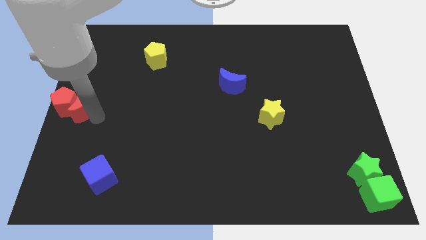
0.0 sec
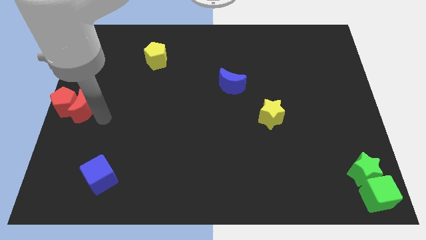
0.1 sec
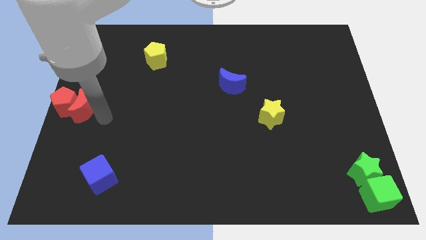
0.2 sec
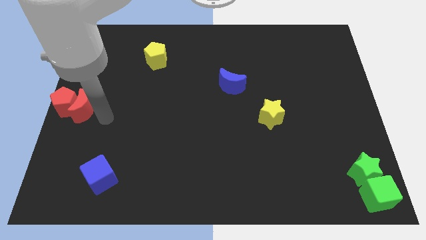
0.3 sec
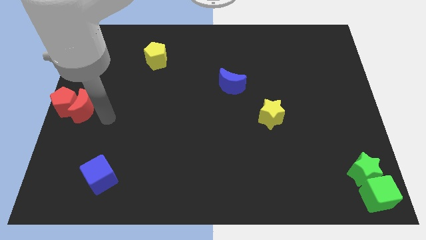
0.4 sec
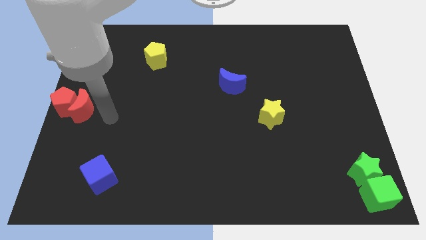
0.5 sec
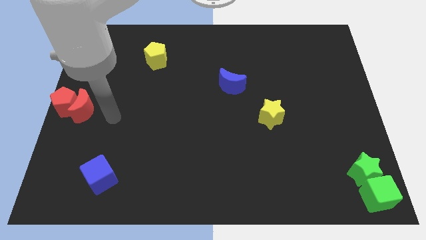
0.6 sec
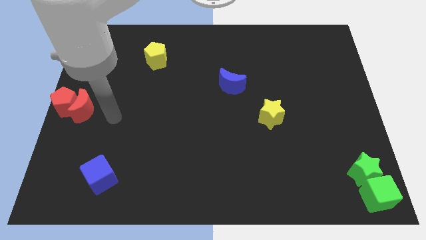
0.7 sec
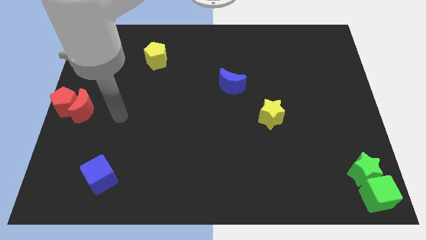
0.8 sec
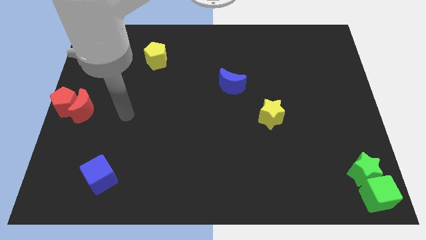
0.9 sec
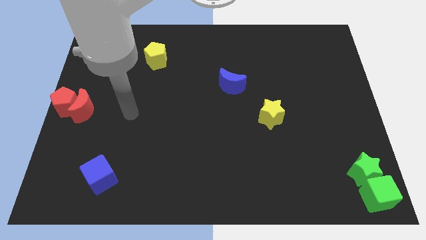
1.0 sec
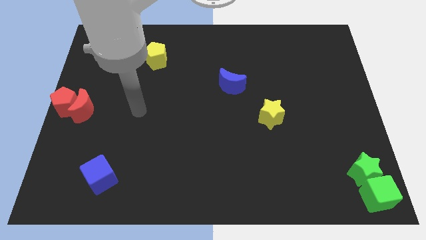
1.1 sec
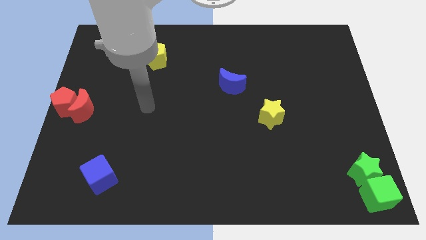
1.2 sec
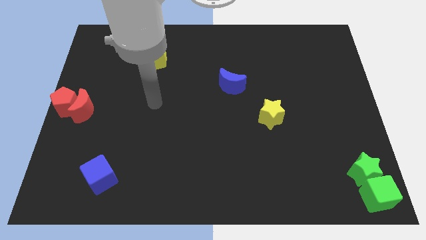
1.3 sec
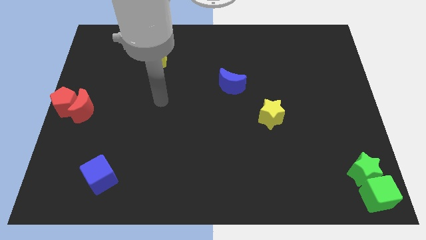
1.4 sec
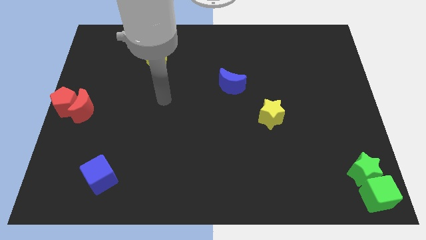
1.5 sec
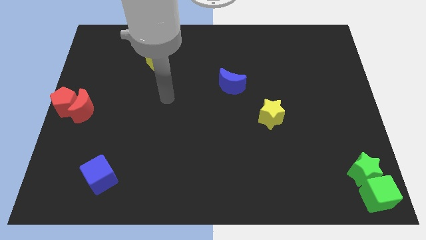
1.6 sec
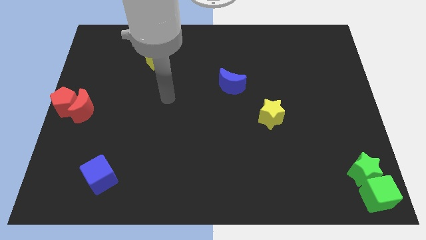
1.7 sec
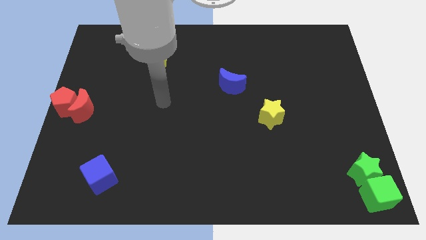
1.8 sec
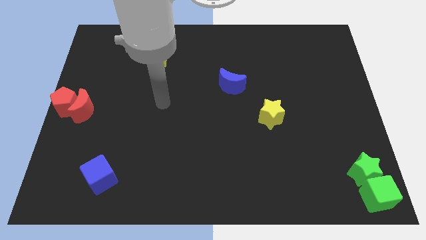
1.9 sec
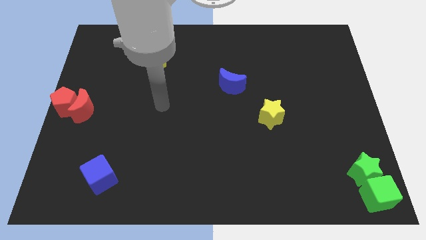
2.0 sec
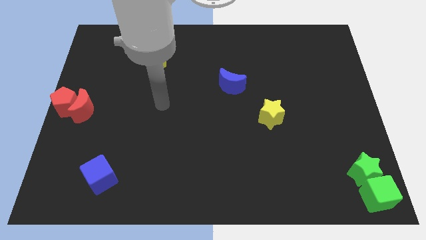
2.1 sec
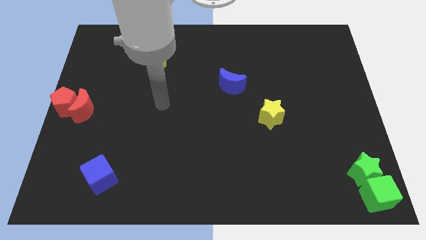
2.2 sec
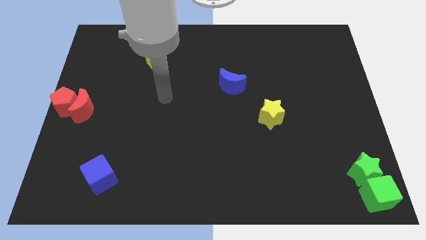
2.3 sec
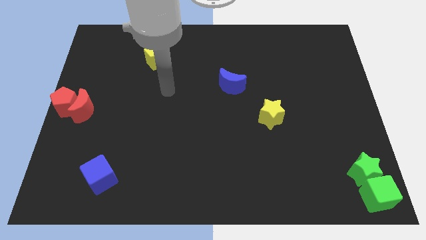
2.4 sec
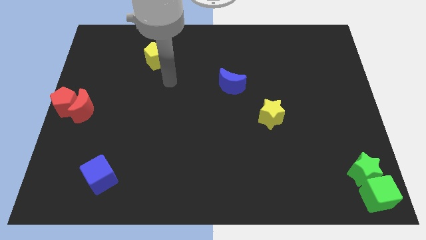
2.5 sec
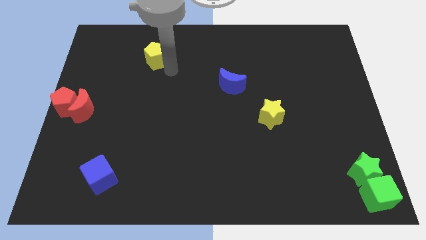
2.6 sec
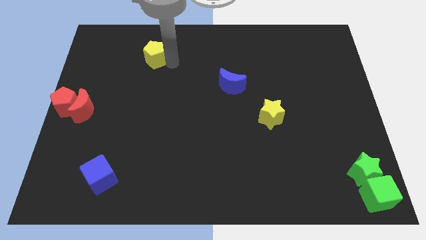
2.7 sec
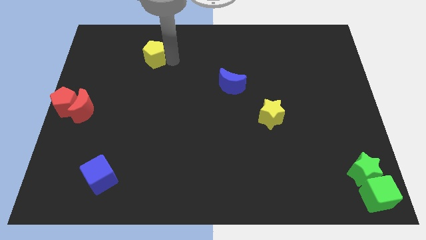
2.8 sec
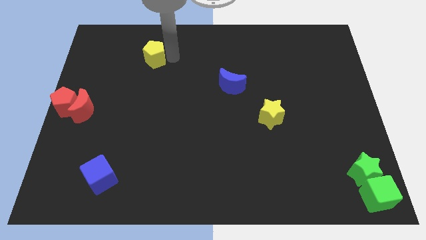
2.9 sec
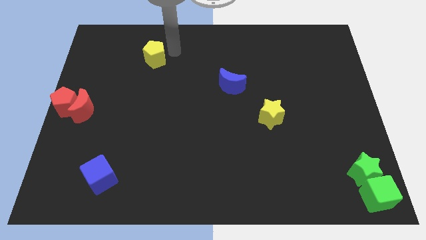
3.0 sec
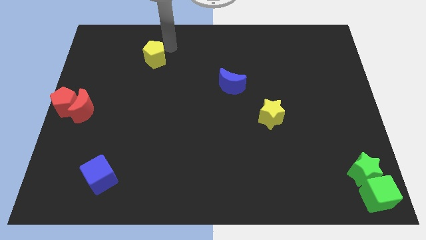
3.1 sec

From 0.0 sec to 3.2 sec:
move the arm away from the red moon

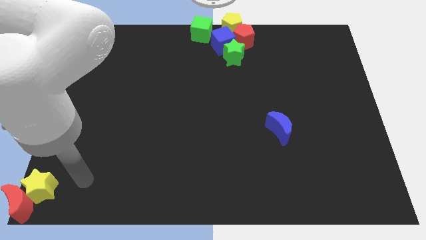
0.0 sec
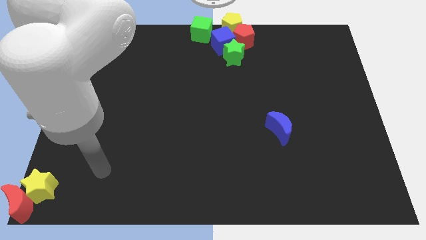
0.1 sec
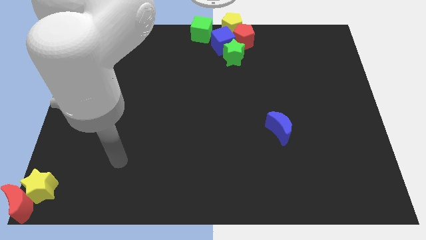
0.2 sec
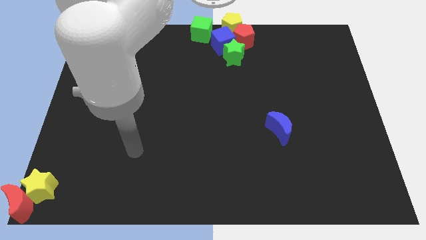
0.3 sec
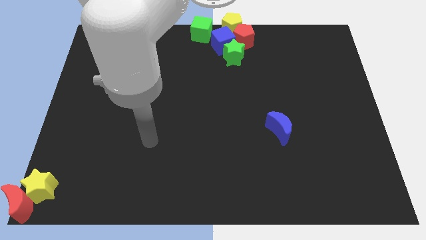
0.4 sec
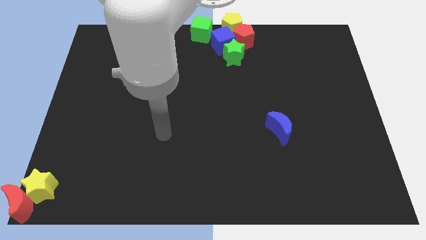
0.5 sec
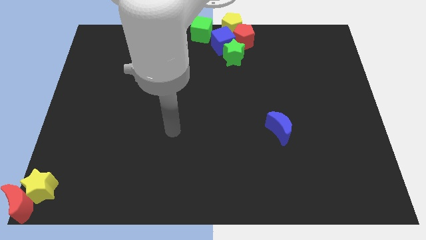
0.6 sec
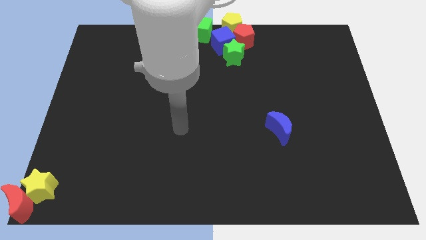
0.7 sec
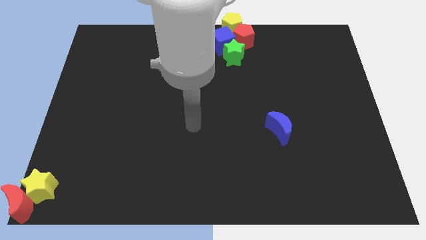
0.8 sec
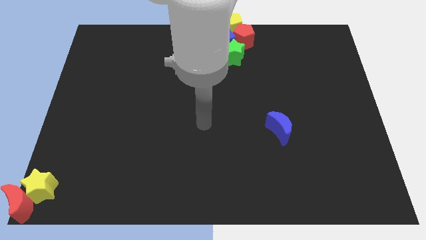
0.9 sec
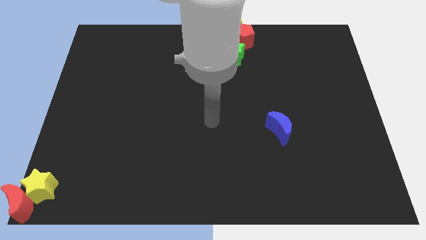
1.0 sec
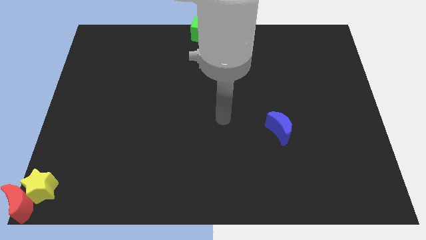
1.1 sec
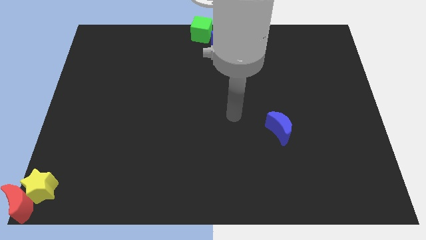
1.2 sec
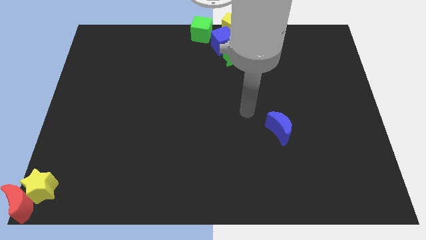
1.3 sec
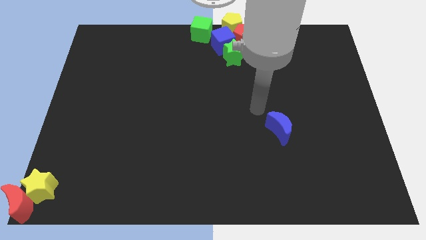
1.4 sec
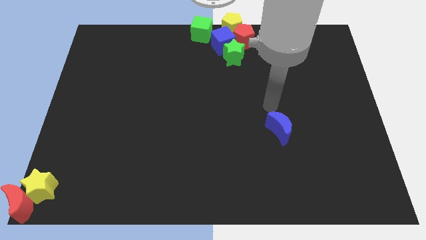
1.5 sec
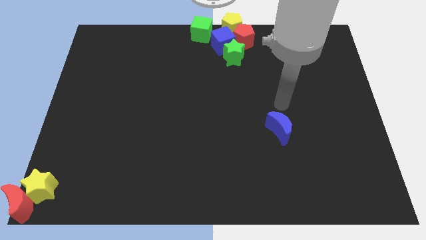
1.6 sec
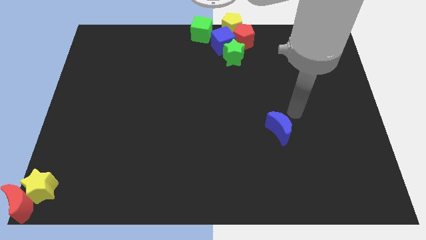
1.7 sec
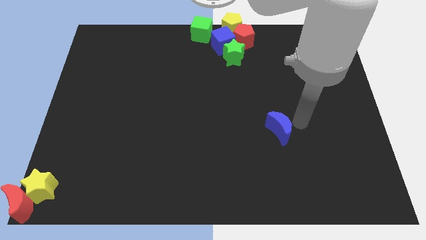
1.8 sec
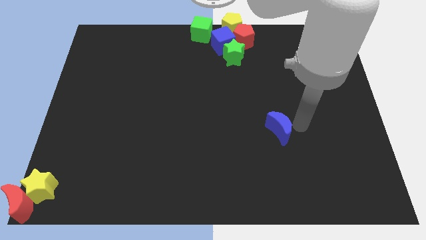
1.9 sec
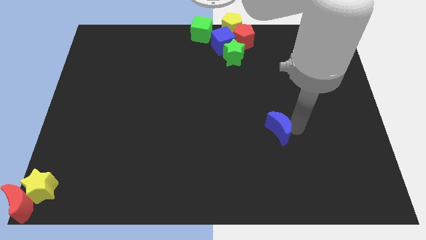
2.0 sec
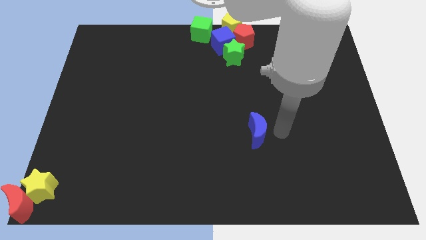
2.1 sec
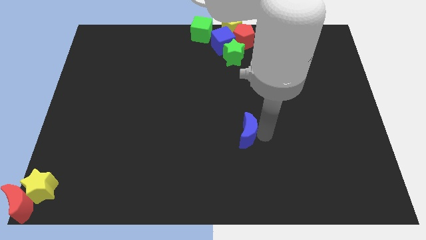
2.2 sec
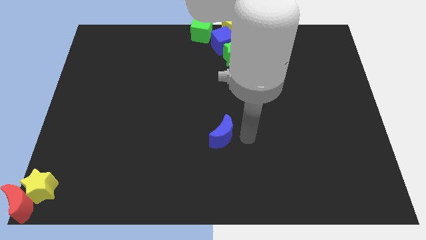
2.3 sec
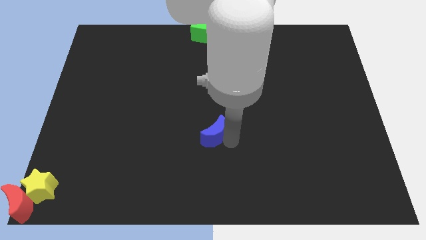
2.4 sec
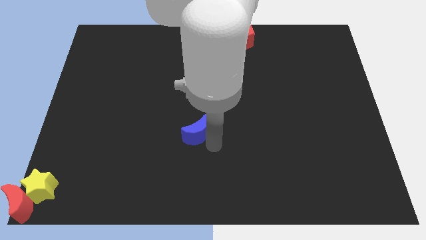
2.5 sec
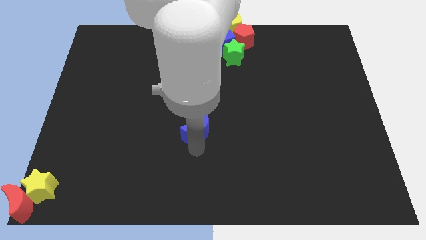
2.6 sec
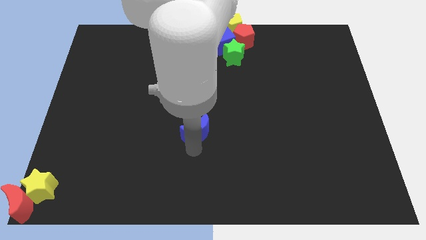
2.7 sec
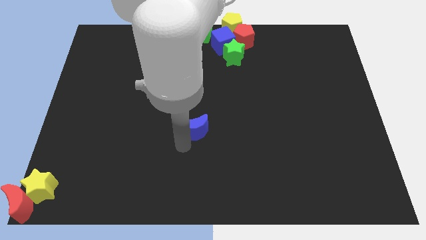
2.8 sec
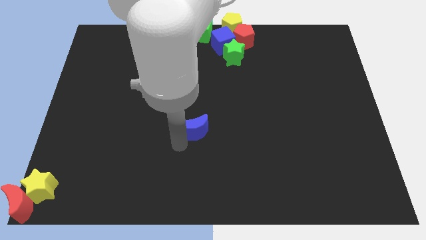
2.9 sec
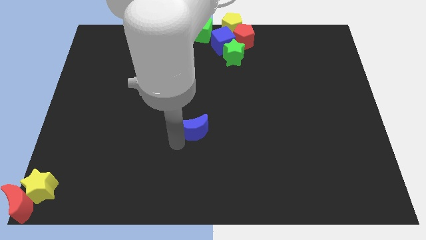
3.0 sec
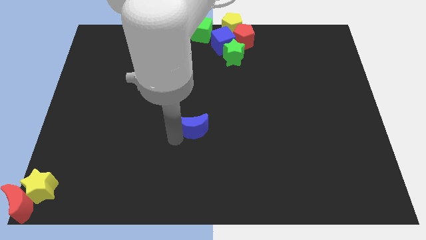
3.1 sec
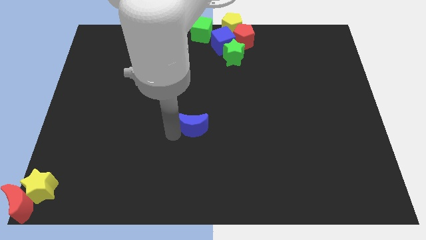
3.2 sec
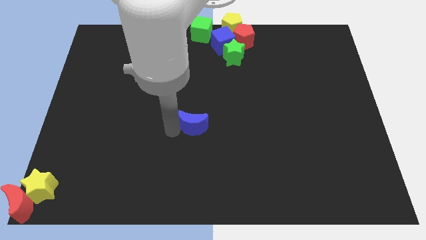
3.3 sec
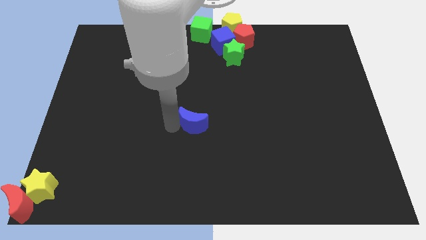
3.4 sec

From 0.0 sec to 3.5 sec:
drag the blue moon to the center of the board

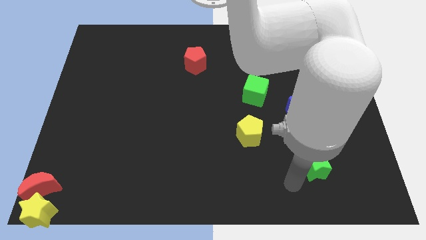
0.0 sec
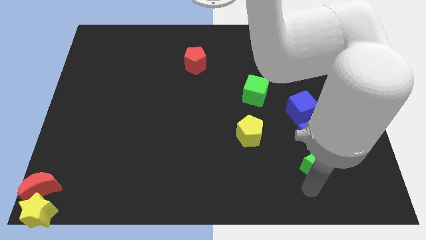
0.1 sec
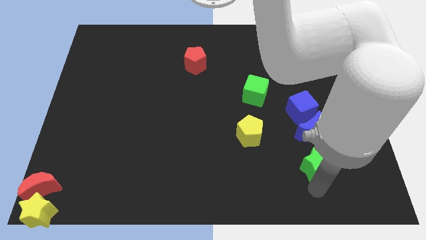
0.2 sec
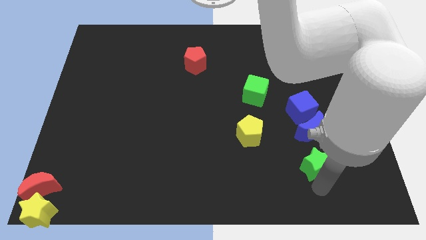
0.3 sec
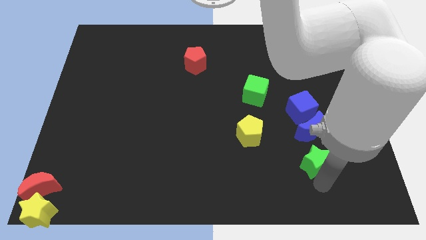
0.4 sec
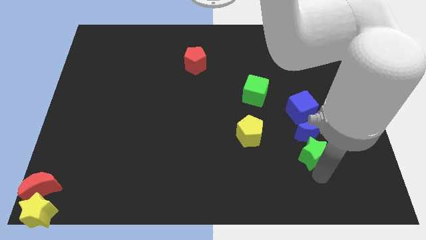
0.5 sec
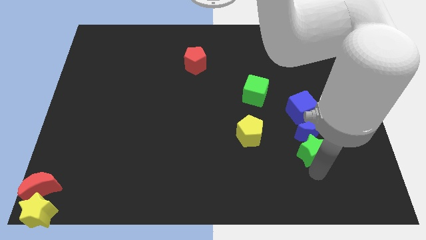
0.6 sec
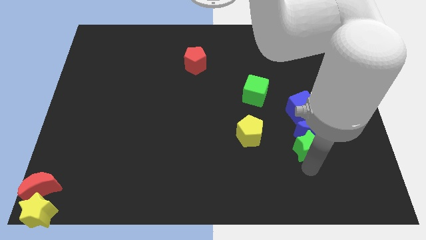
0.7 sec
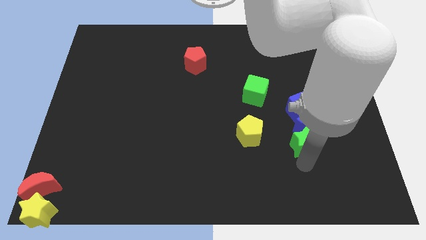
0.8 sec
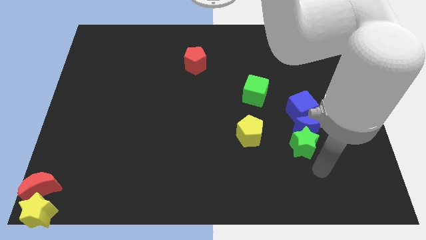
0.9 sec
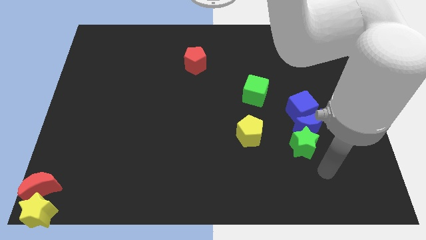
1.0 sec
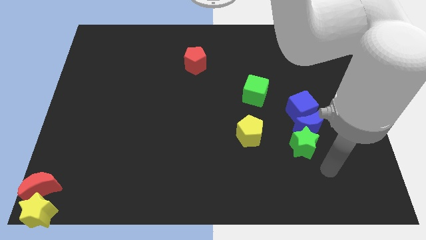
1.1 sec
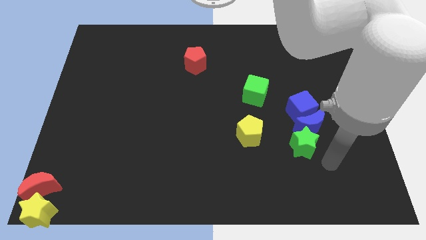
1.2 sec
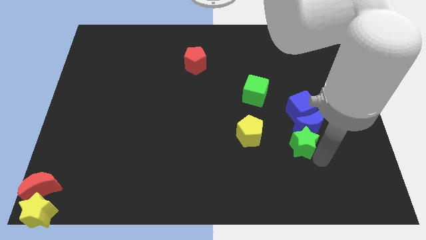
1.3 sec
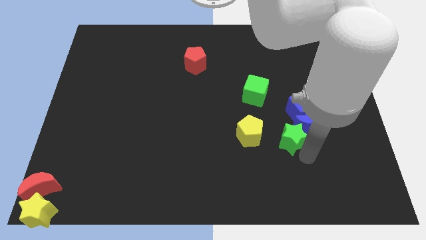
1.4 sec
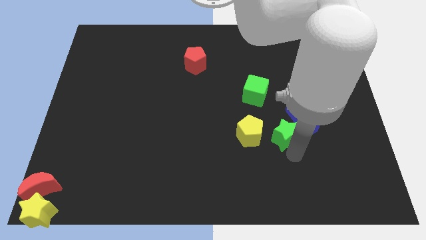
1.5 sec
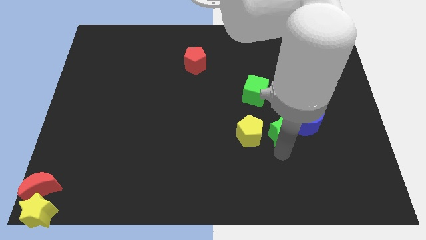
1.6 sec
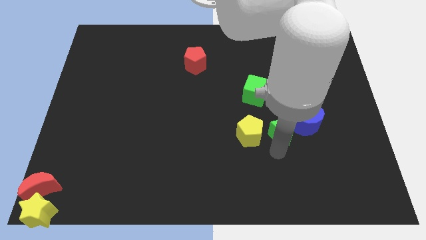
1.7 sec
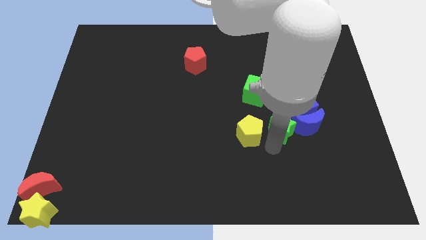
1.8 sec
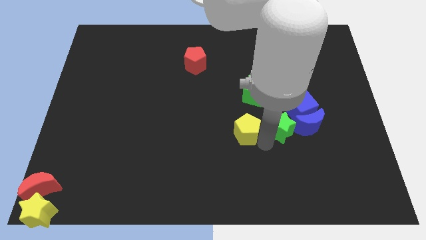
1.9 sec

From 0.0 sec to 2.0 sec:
place the green star close to the blue blocks

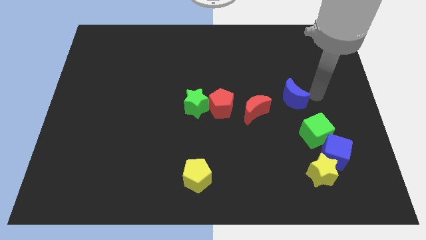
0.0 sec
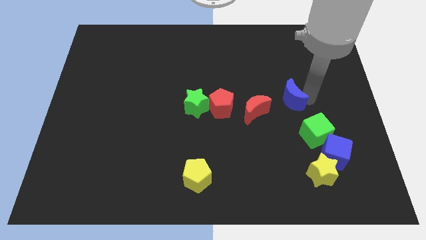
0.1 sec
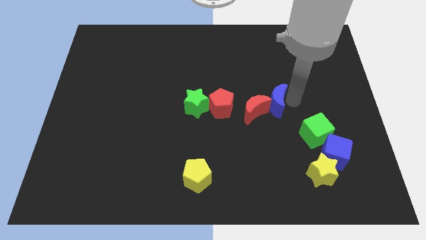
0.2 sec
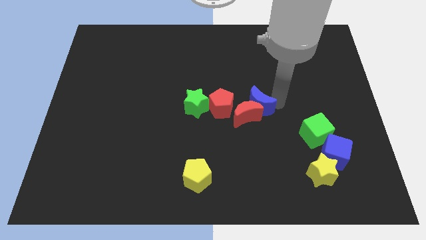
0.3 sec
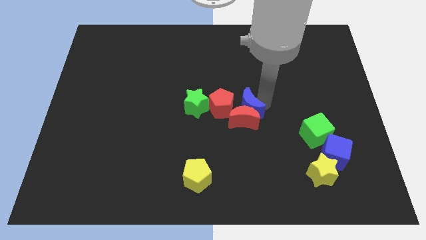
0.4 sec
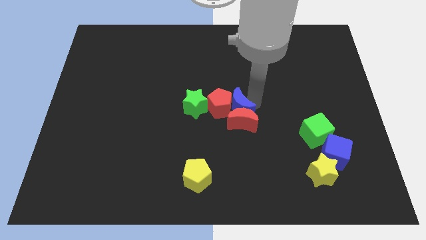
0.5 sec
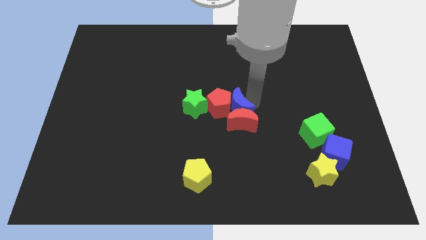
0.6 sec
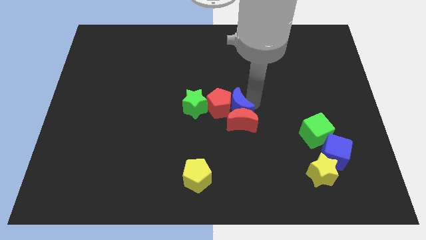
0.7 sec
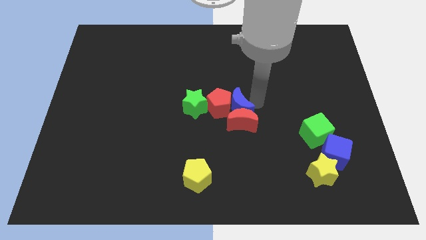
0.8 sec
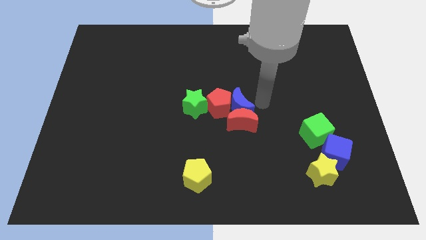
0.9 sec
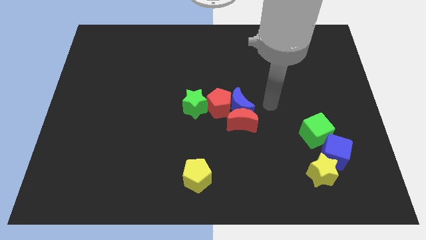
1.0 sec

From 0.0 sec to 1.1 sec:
push the blue crescent into the red crescent
